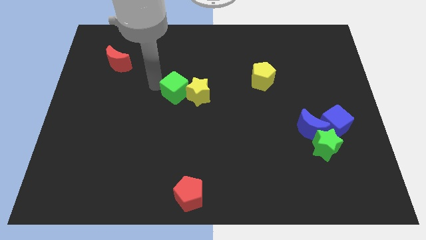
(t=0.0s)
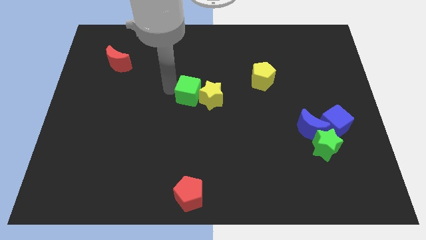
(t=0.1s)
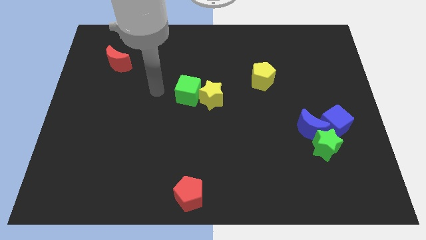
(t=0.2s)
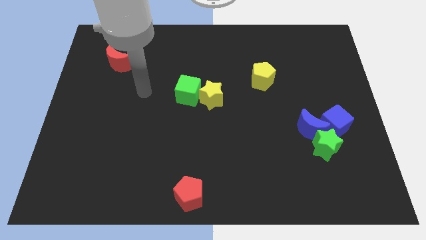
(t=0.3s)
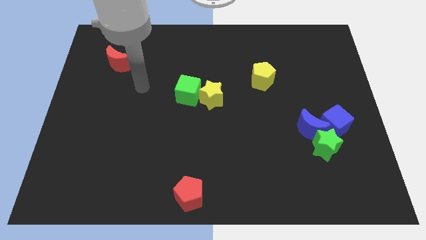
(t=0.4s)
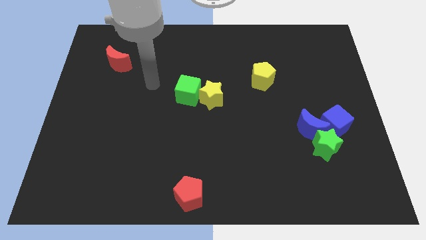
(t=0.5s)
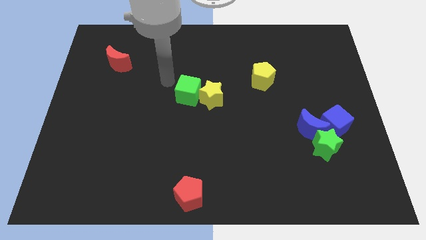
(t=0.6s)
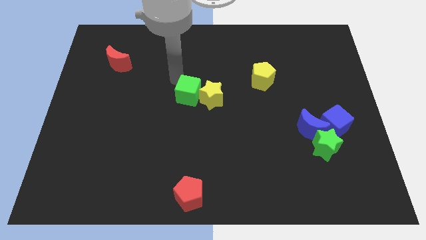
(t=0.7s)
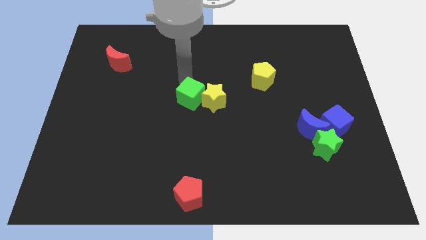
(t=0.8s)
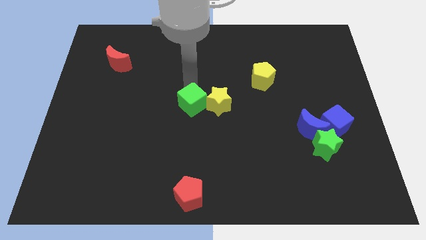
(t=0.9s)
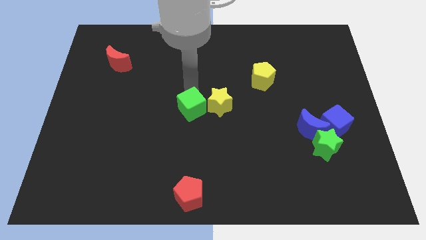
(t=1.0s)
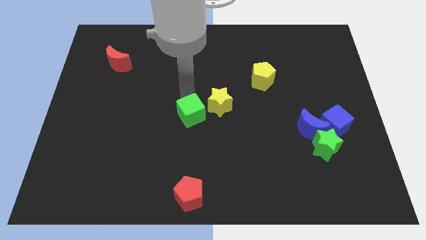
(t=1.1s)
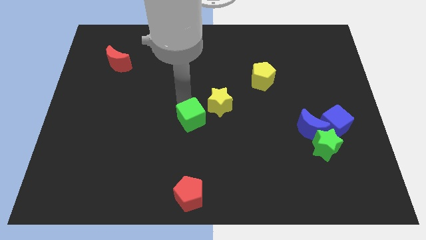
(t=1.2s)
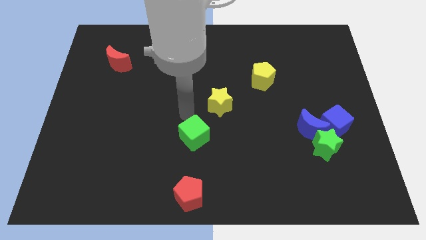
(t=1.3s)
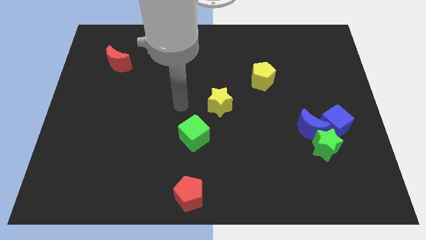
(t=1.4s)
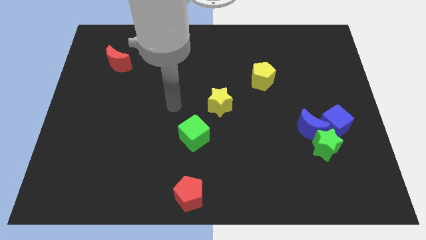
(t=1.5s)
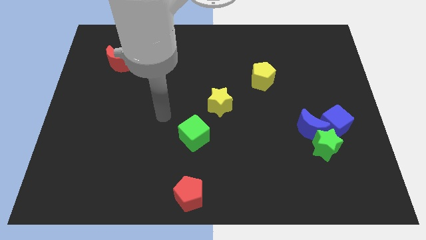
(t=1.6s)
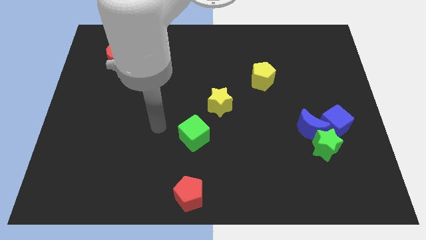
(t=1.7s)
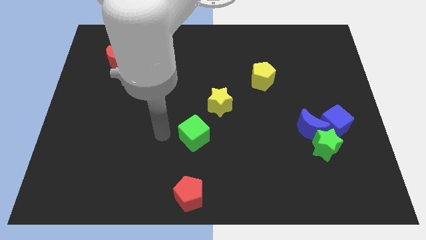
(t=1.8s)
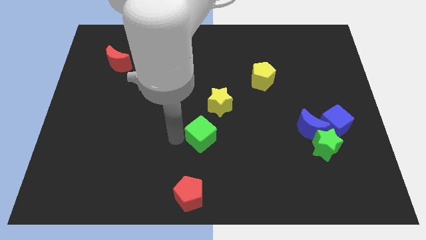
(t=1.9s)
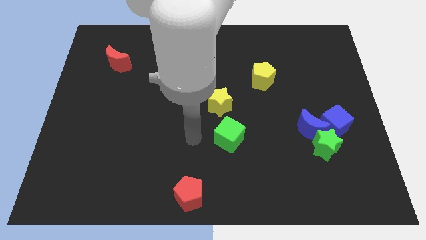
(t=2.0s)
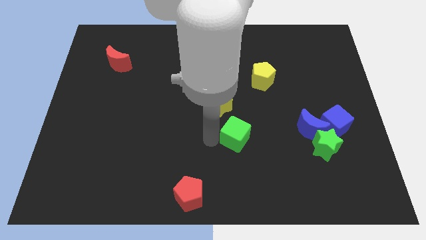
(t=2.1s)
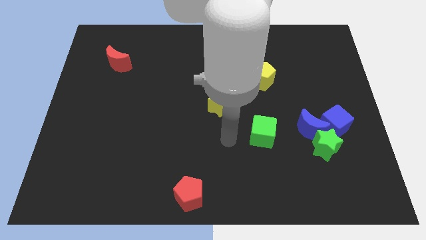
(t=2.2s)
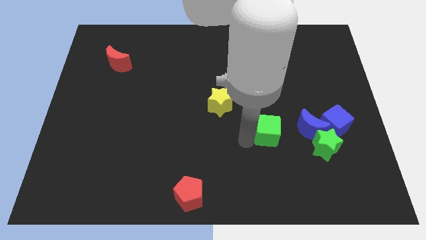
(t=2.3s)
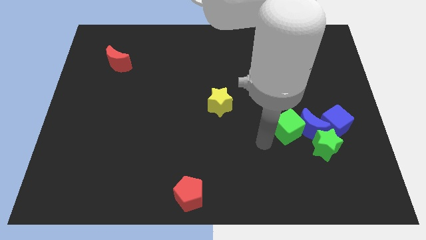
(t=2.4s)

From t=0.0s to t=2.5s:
push the green cube above the blue crescent

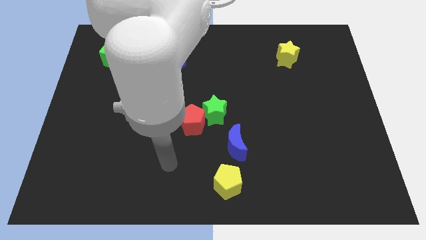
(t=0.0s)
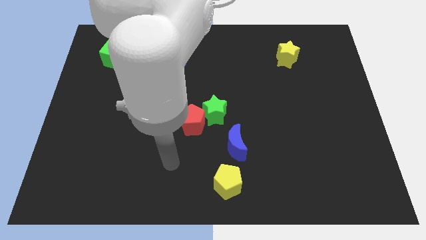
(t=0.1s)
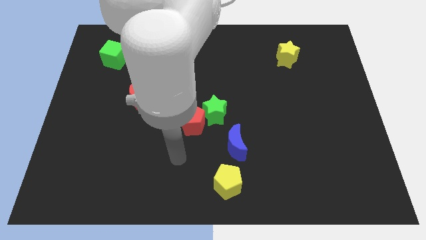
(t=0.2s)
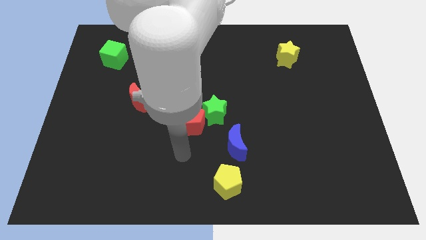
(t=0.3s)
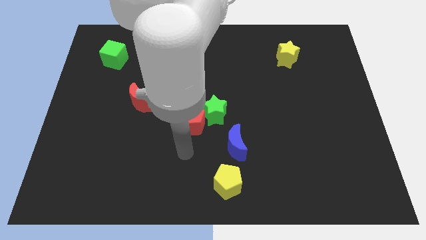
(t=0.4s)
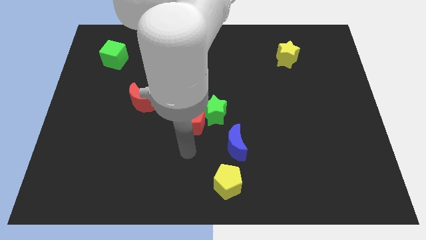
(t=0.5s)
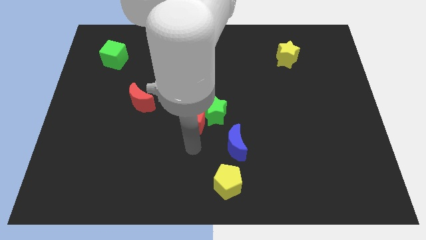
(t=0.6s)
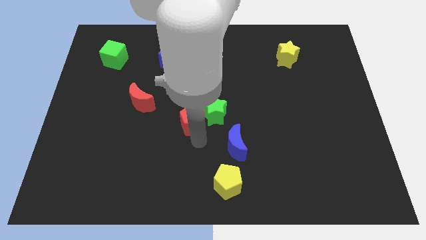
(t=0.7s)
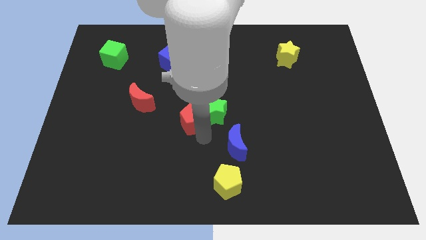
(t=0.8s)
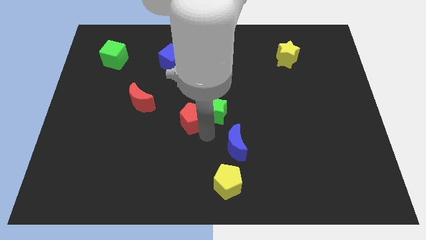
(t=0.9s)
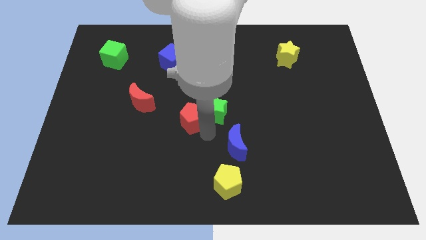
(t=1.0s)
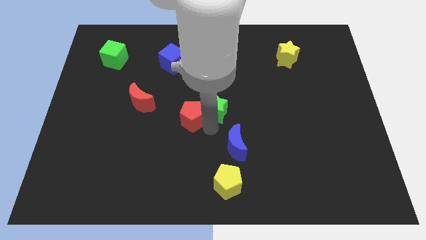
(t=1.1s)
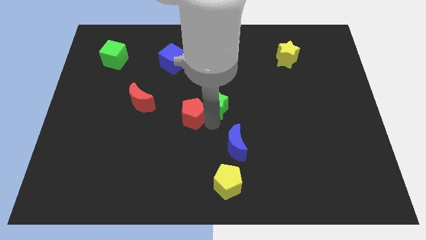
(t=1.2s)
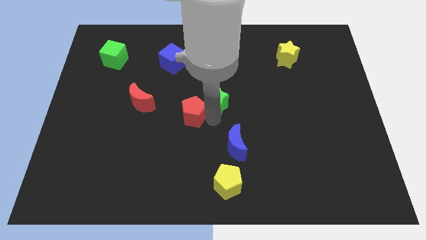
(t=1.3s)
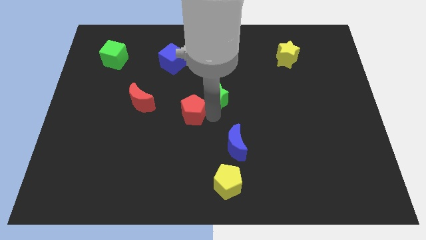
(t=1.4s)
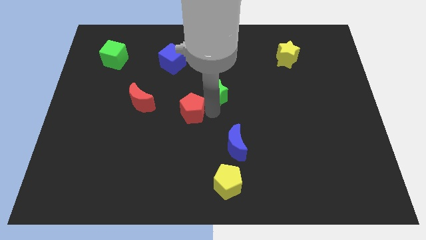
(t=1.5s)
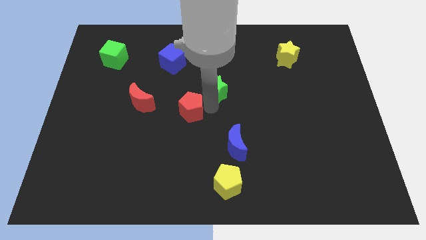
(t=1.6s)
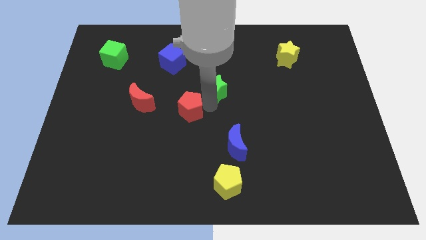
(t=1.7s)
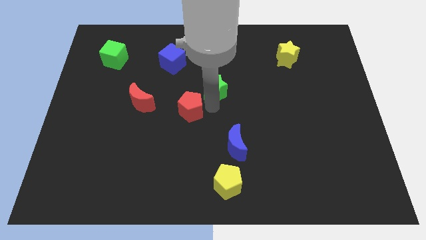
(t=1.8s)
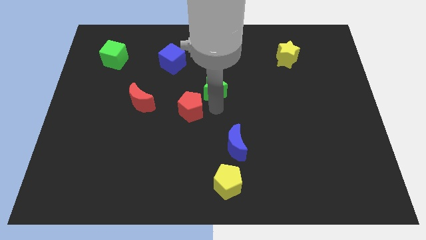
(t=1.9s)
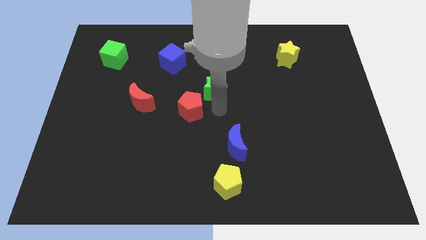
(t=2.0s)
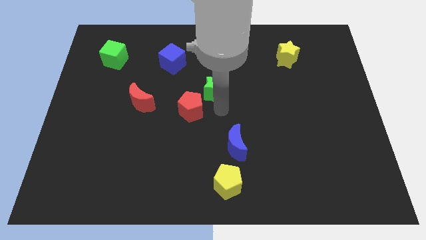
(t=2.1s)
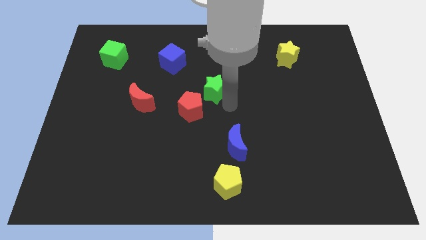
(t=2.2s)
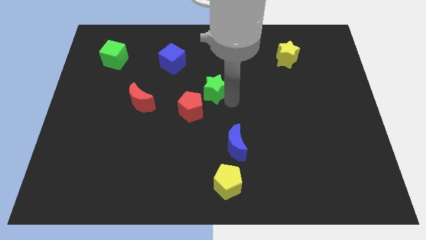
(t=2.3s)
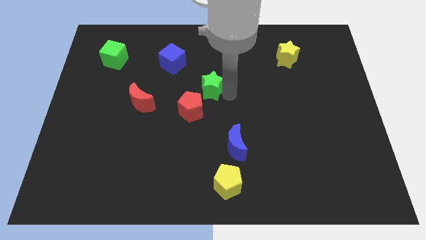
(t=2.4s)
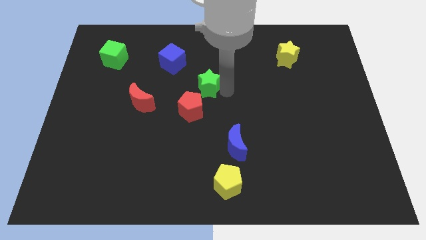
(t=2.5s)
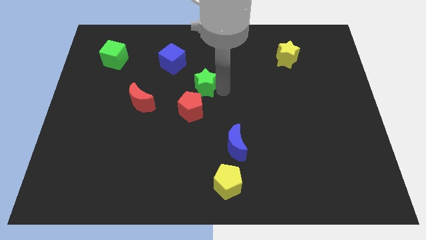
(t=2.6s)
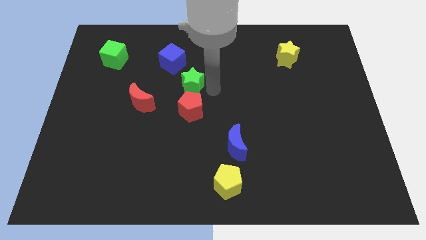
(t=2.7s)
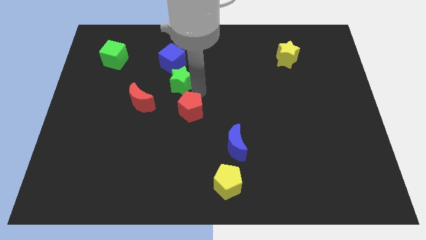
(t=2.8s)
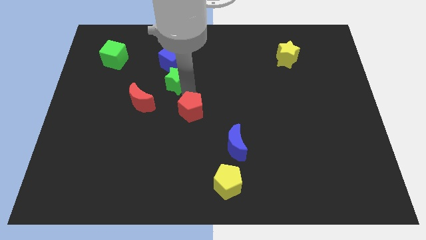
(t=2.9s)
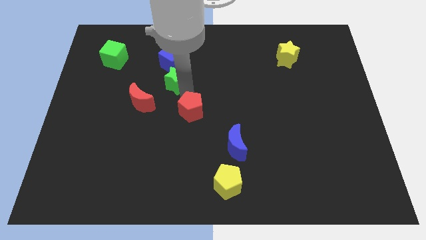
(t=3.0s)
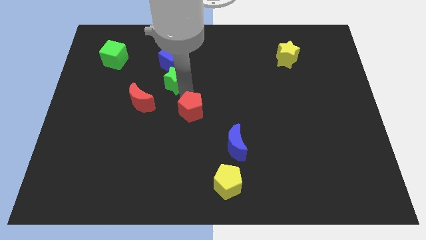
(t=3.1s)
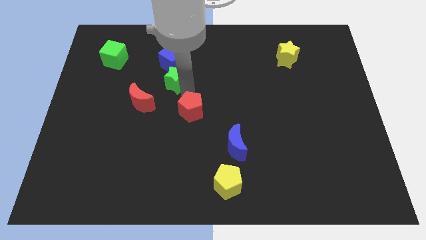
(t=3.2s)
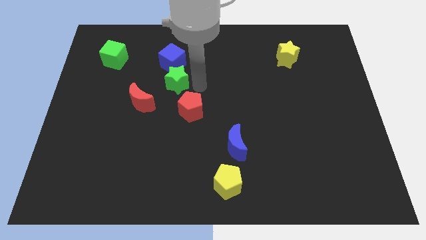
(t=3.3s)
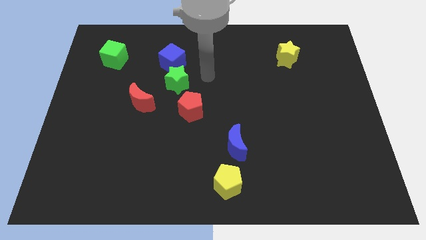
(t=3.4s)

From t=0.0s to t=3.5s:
place the green star between red pentagon and blue cube

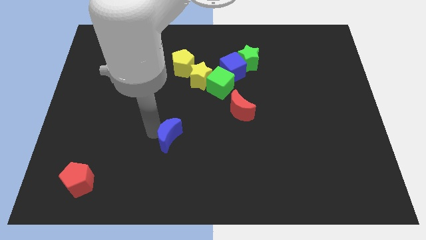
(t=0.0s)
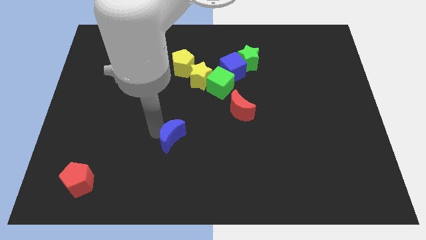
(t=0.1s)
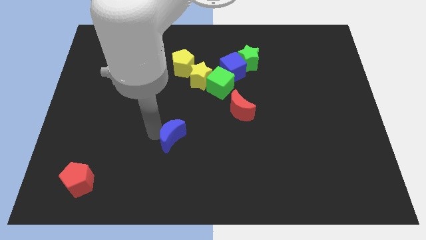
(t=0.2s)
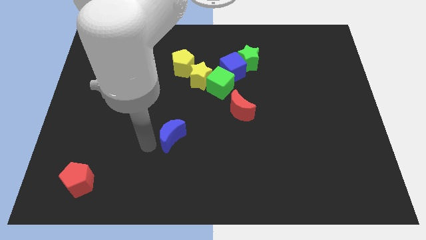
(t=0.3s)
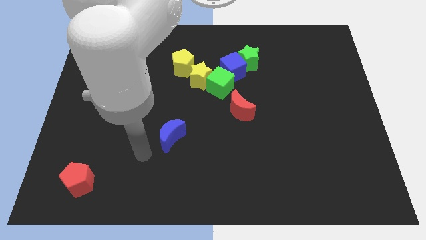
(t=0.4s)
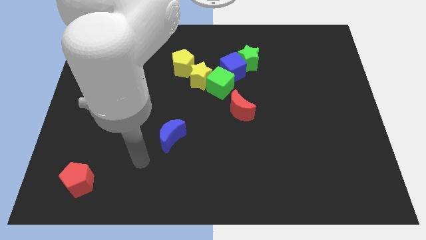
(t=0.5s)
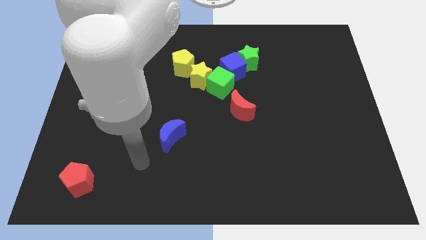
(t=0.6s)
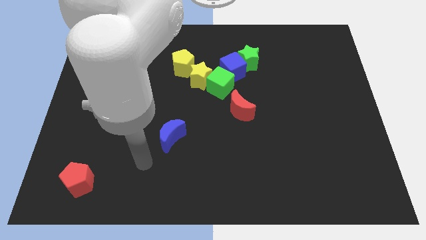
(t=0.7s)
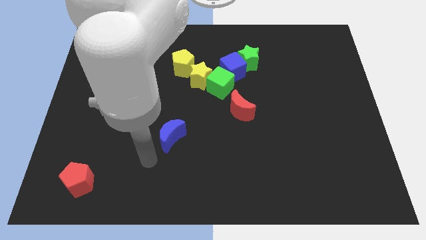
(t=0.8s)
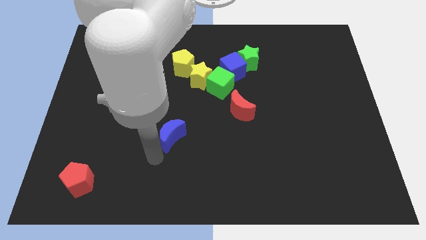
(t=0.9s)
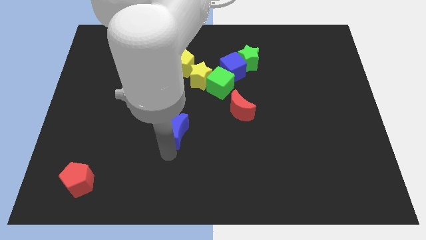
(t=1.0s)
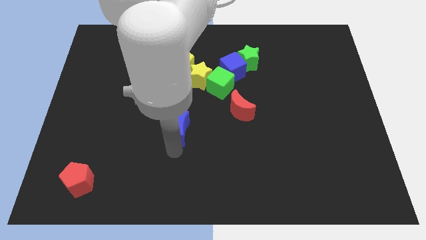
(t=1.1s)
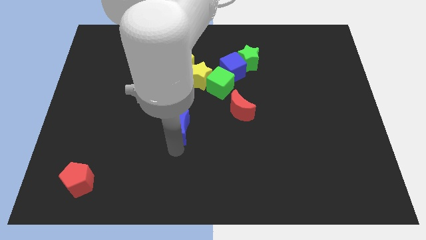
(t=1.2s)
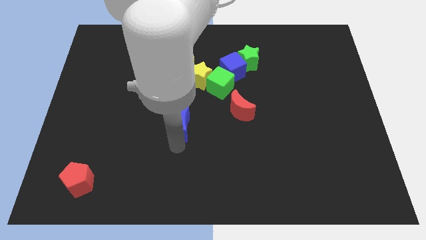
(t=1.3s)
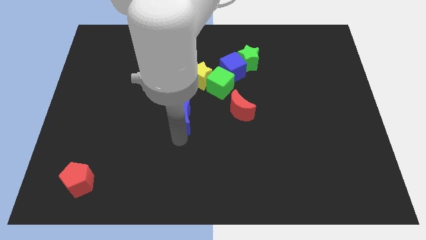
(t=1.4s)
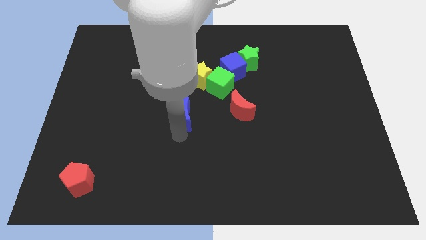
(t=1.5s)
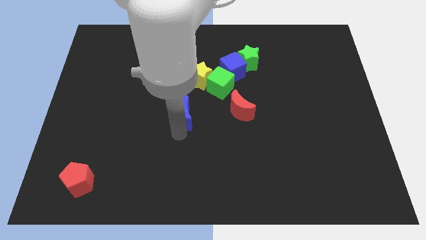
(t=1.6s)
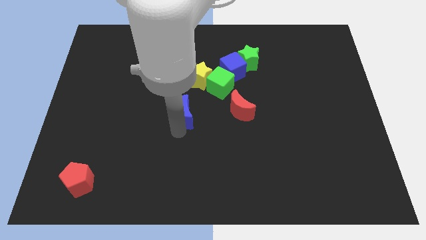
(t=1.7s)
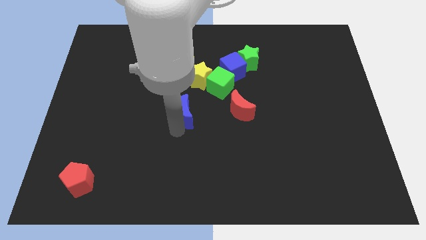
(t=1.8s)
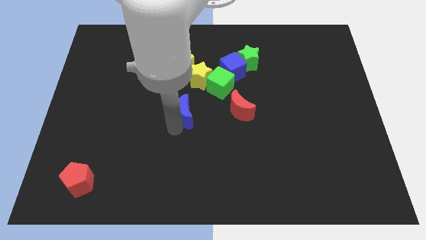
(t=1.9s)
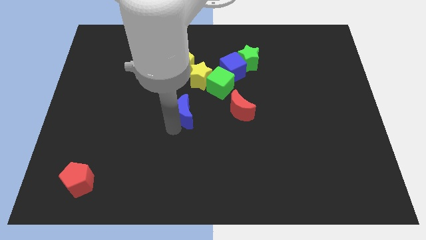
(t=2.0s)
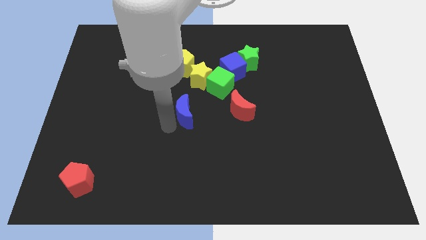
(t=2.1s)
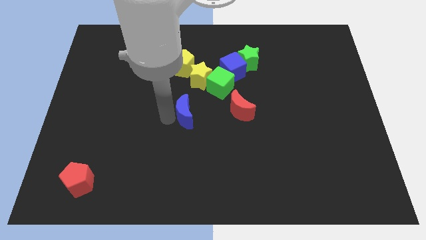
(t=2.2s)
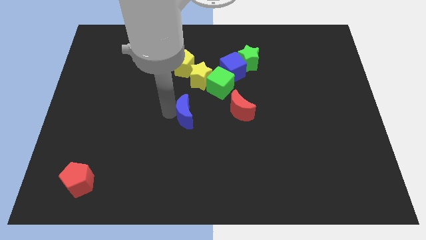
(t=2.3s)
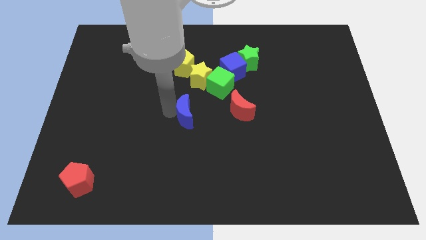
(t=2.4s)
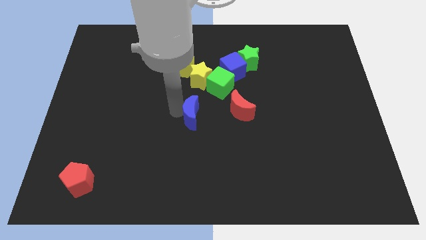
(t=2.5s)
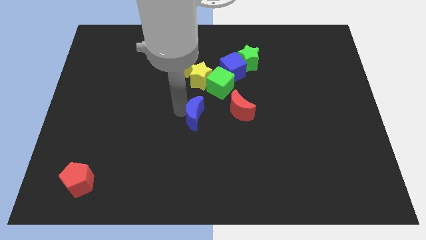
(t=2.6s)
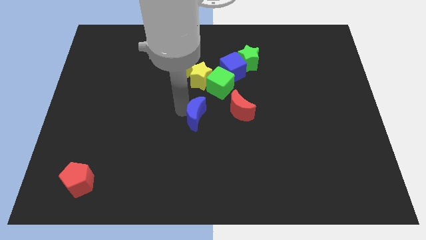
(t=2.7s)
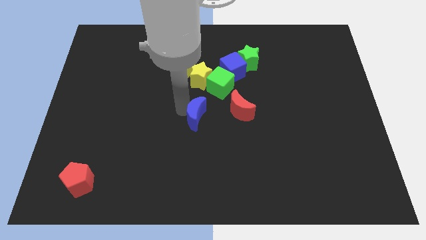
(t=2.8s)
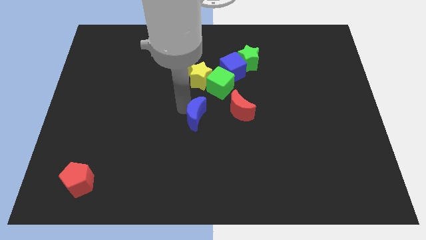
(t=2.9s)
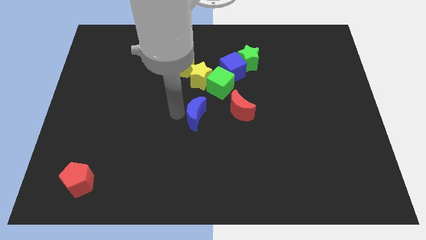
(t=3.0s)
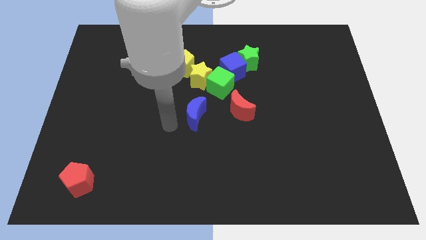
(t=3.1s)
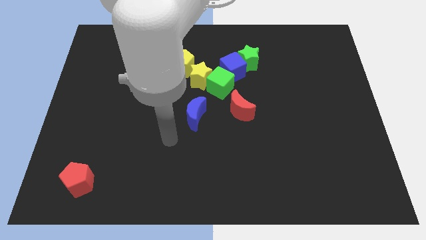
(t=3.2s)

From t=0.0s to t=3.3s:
push the blue crescent to the bottom of the green cube
